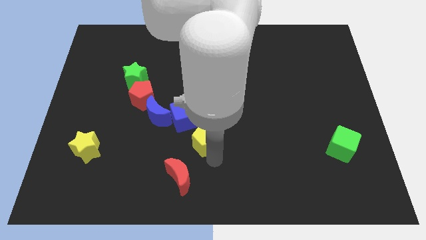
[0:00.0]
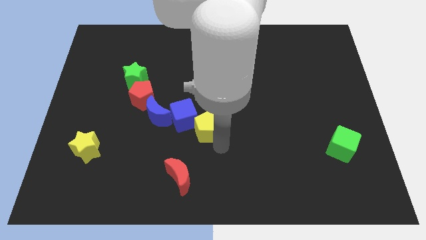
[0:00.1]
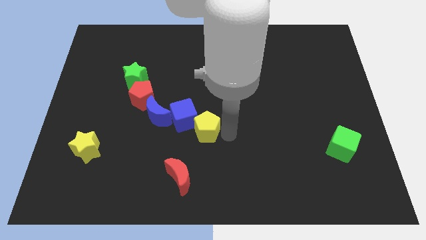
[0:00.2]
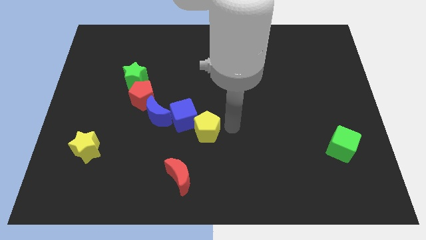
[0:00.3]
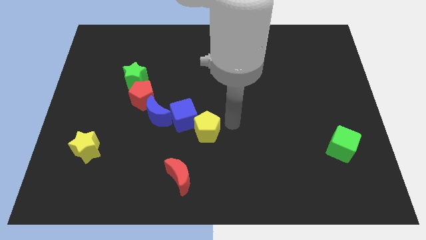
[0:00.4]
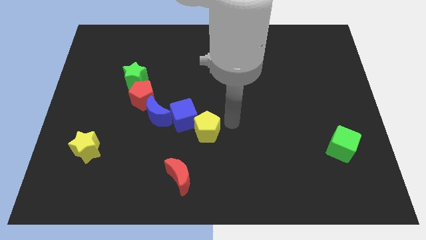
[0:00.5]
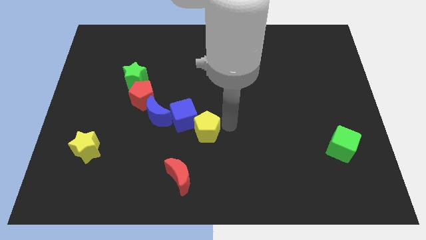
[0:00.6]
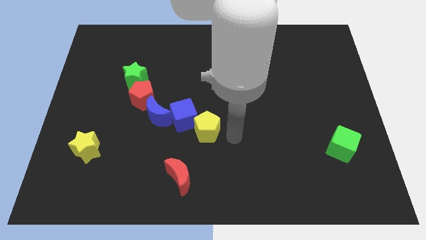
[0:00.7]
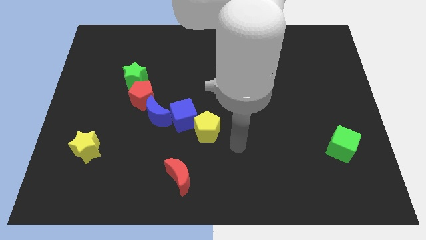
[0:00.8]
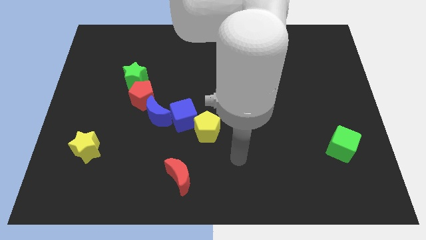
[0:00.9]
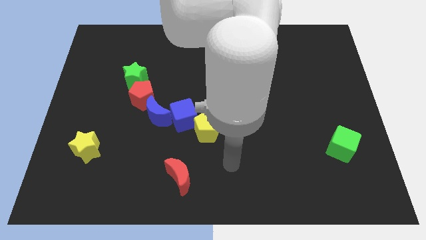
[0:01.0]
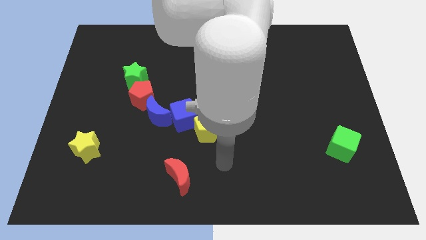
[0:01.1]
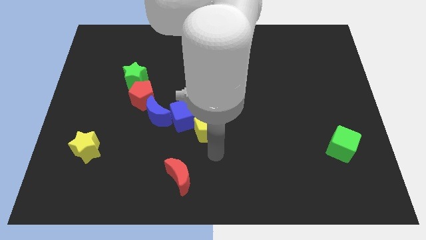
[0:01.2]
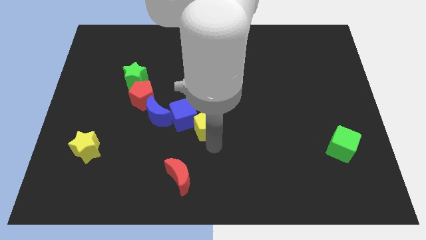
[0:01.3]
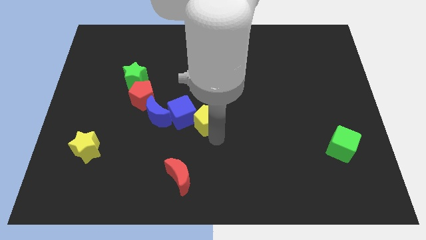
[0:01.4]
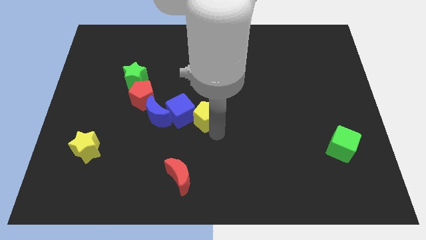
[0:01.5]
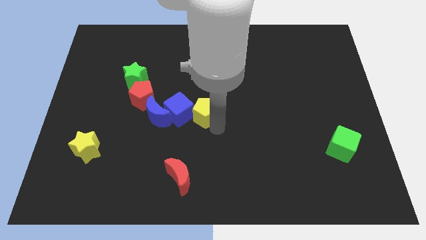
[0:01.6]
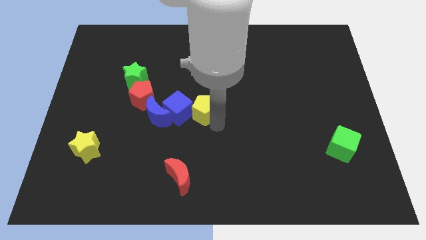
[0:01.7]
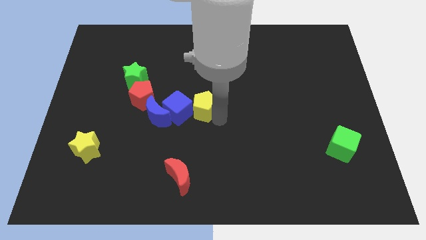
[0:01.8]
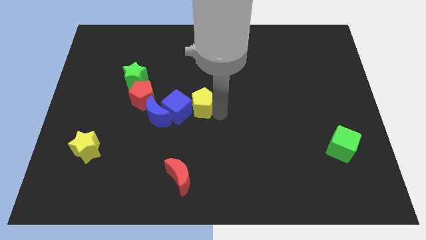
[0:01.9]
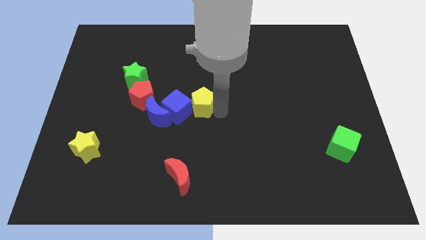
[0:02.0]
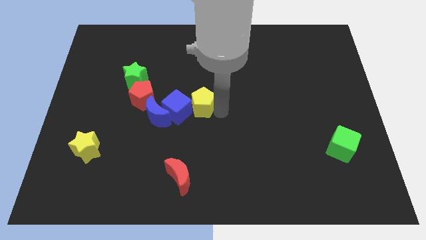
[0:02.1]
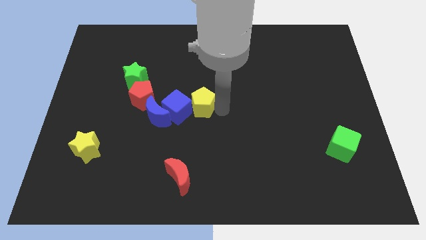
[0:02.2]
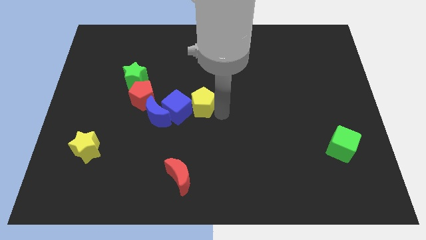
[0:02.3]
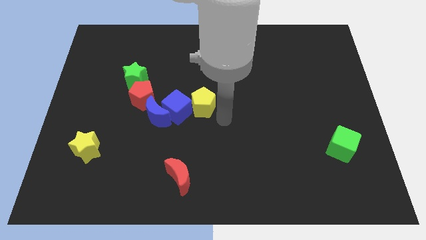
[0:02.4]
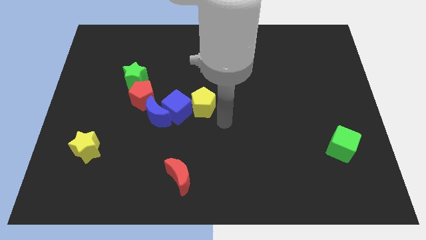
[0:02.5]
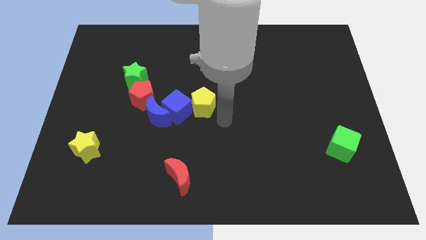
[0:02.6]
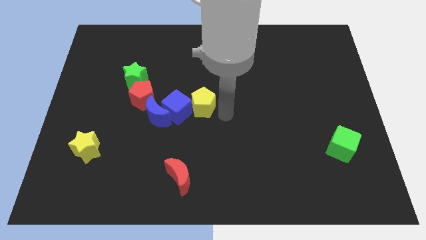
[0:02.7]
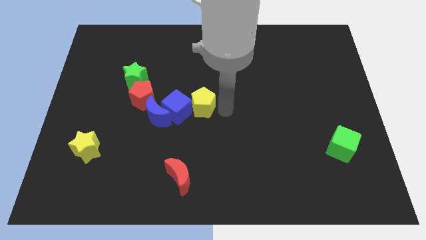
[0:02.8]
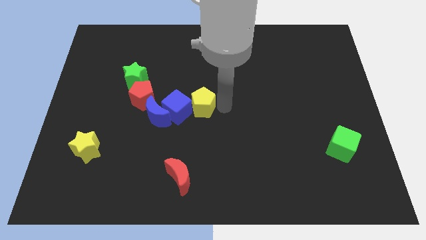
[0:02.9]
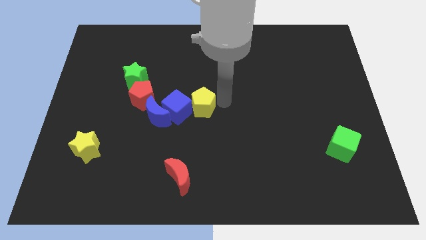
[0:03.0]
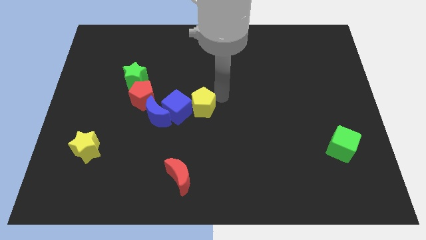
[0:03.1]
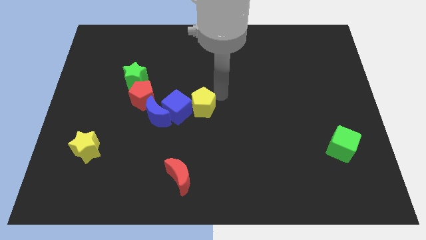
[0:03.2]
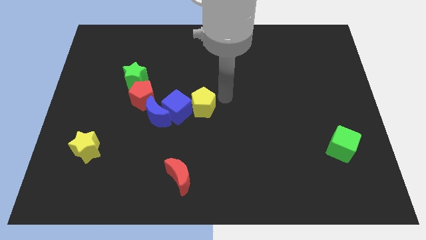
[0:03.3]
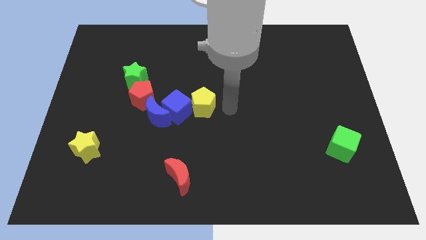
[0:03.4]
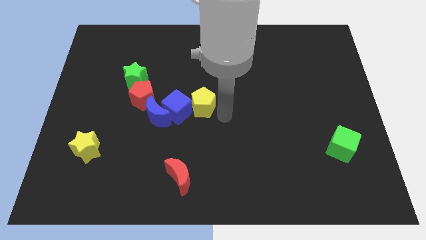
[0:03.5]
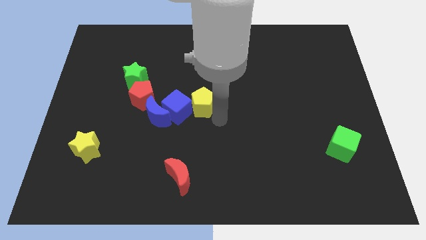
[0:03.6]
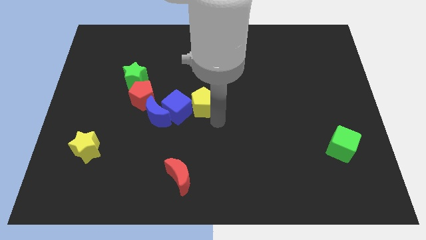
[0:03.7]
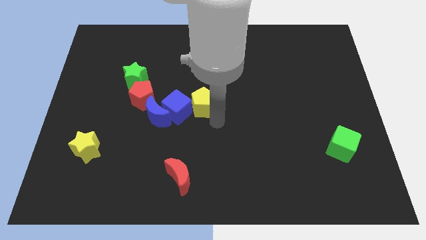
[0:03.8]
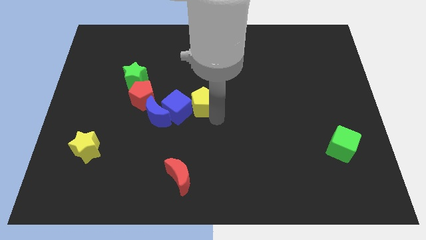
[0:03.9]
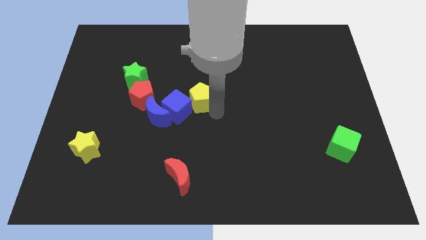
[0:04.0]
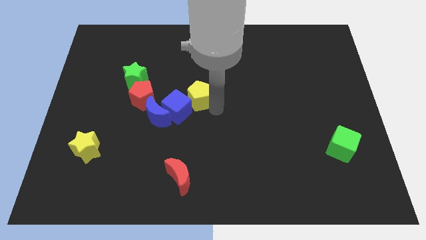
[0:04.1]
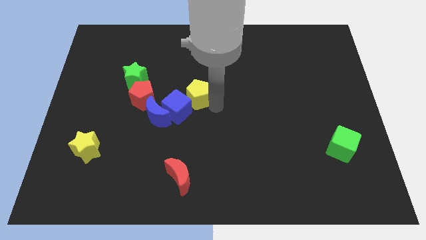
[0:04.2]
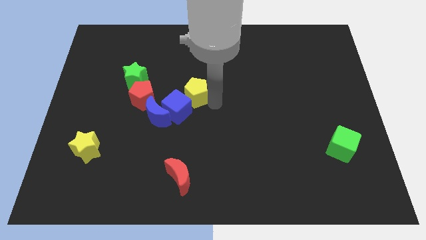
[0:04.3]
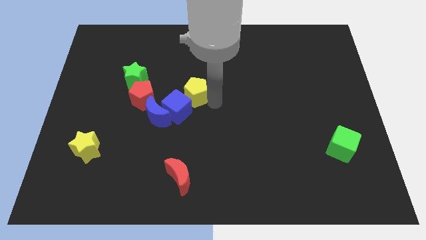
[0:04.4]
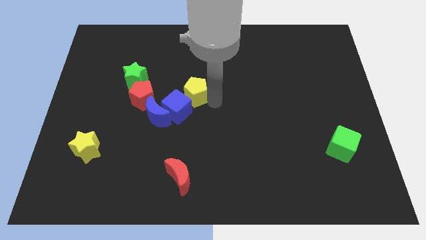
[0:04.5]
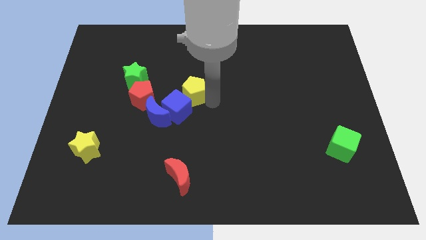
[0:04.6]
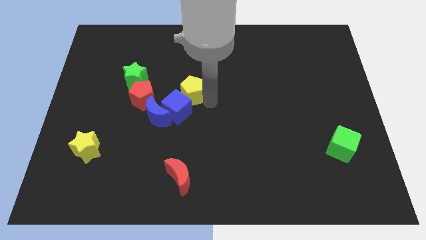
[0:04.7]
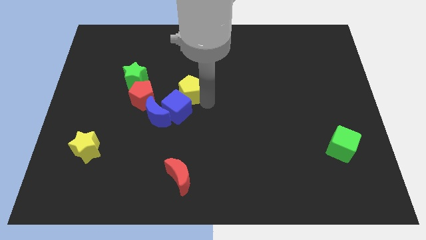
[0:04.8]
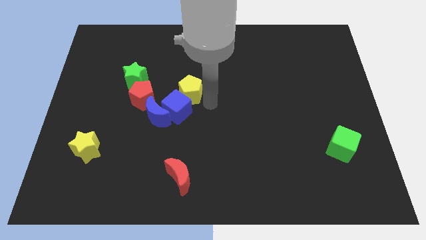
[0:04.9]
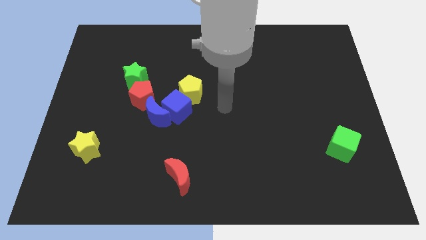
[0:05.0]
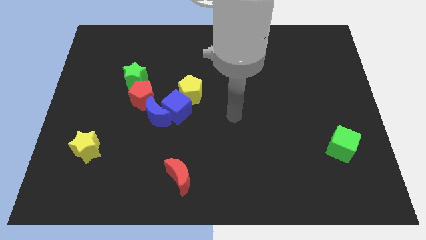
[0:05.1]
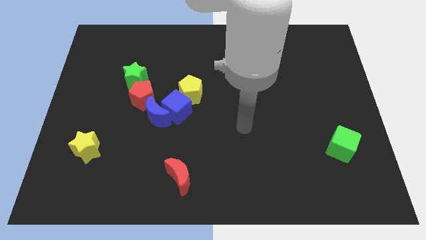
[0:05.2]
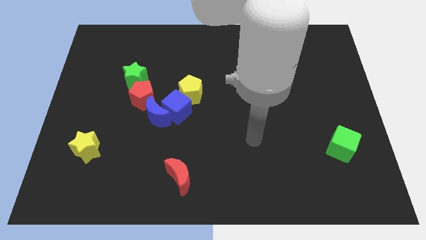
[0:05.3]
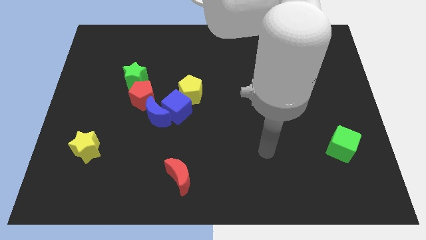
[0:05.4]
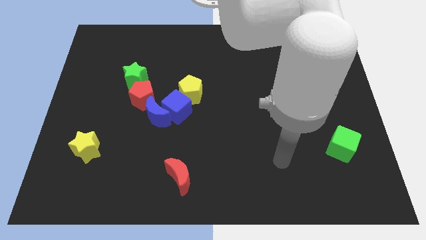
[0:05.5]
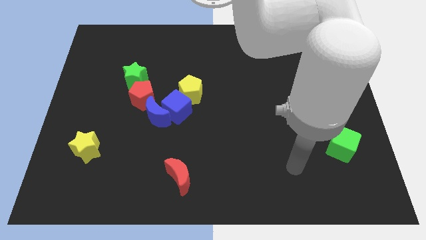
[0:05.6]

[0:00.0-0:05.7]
place the yellow pentagon above the blue cube

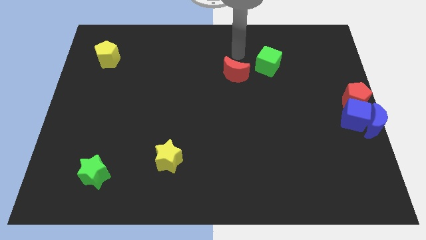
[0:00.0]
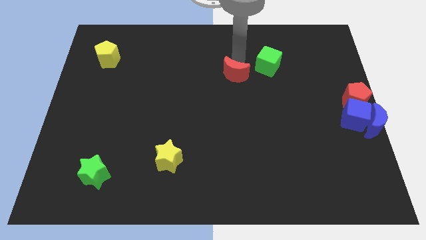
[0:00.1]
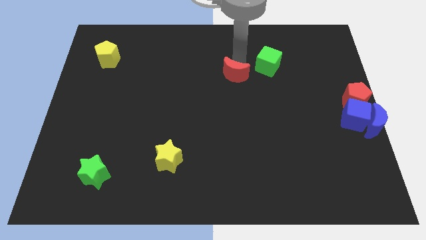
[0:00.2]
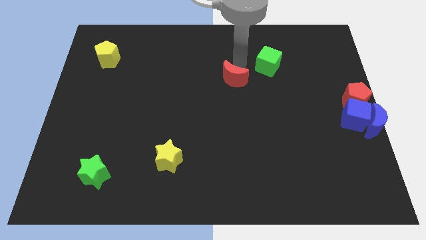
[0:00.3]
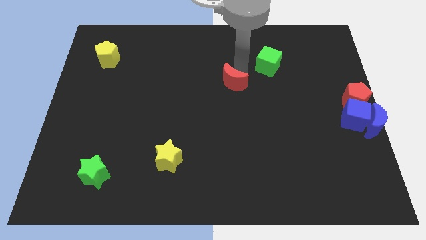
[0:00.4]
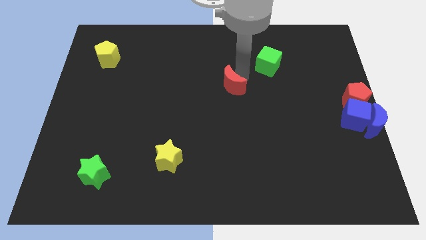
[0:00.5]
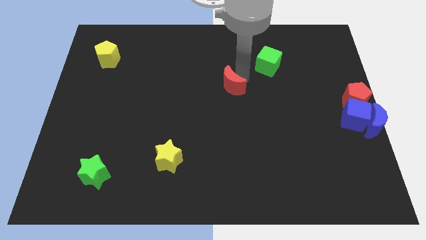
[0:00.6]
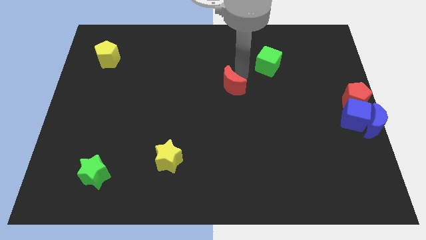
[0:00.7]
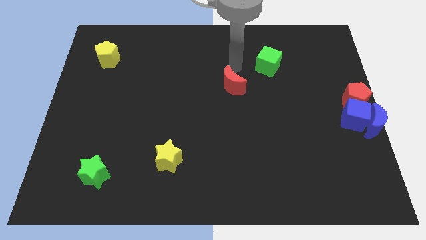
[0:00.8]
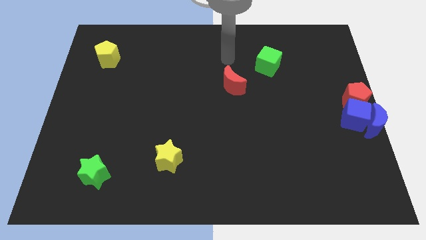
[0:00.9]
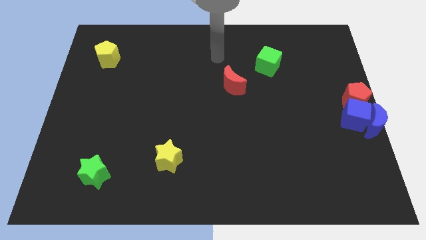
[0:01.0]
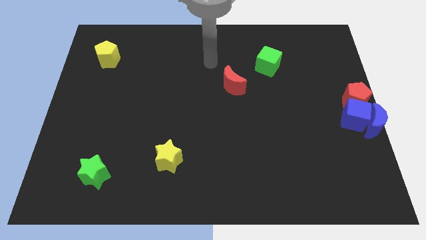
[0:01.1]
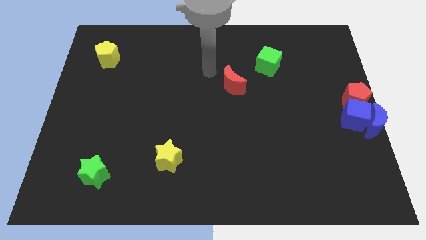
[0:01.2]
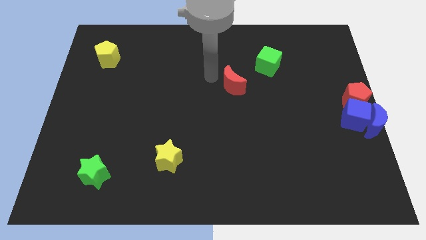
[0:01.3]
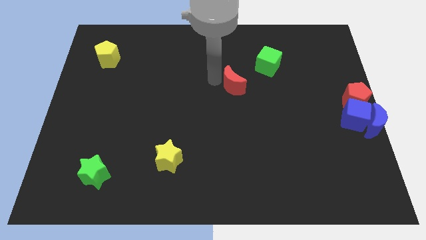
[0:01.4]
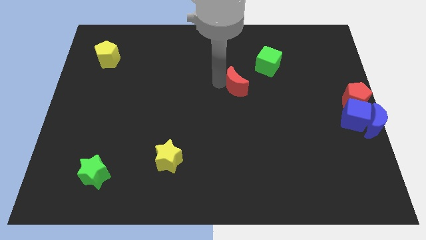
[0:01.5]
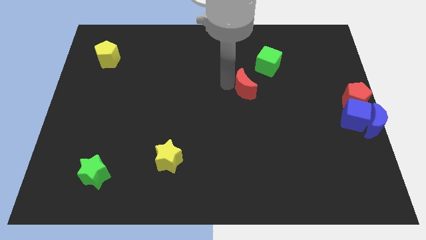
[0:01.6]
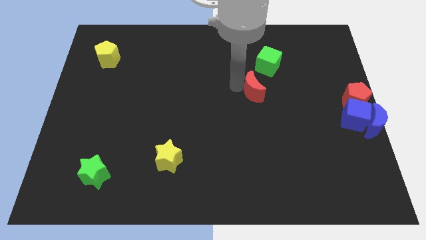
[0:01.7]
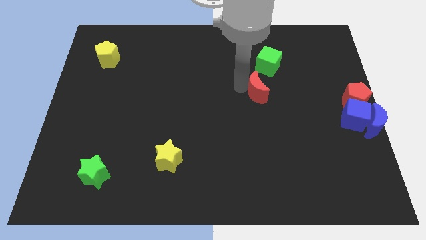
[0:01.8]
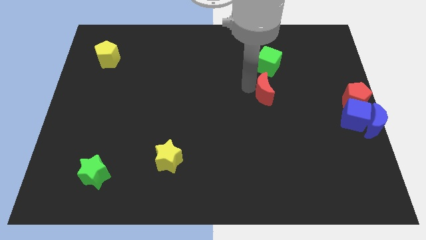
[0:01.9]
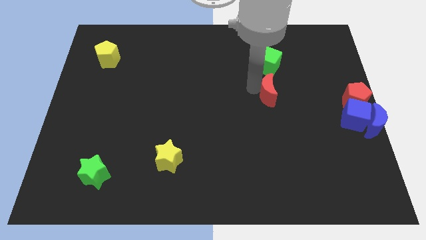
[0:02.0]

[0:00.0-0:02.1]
place the red moon below the green cube

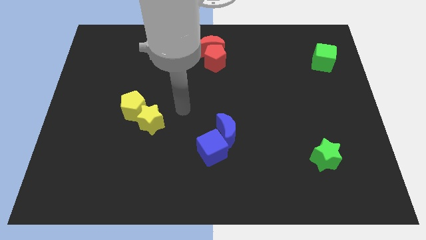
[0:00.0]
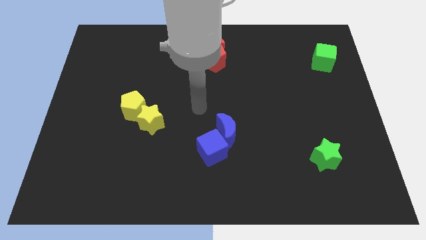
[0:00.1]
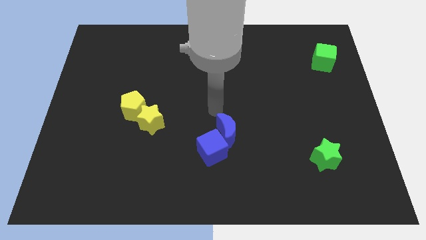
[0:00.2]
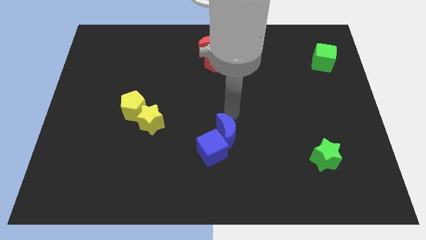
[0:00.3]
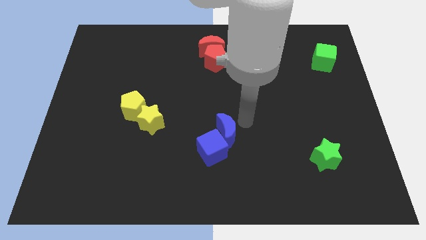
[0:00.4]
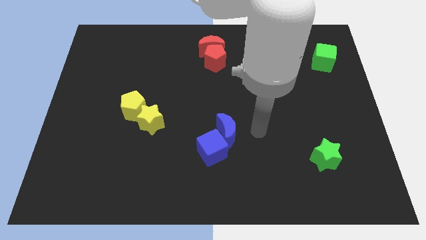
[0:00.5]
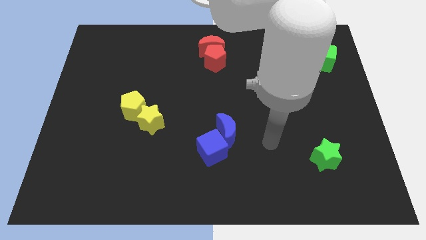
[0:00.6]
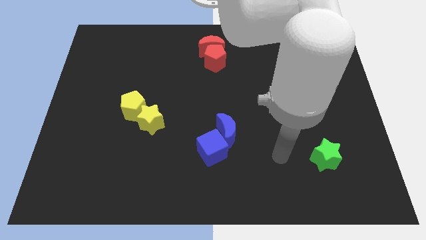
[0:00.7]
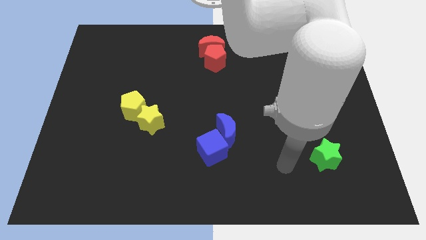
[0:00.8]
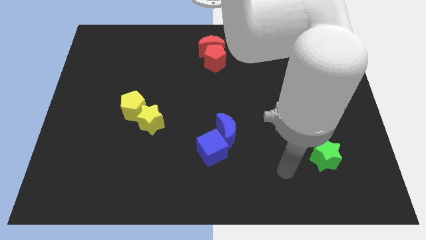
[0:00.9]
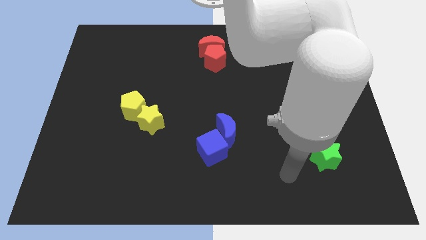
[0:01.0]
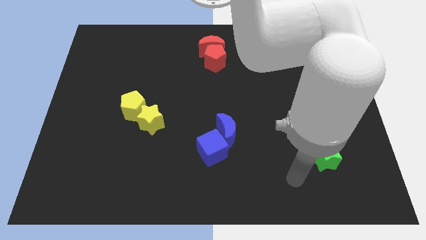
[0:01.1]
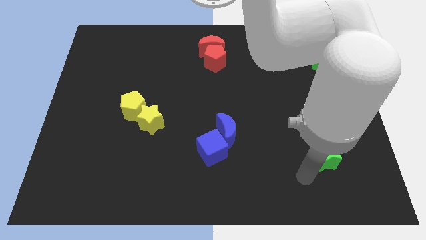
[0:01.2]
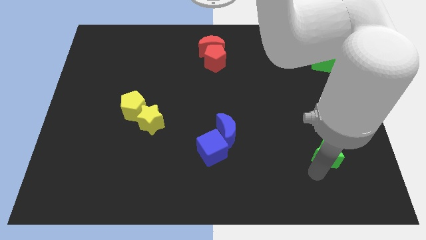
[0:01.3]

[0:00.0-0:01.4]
point your arm at the bottom left side of the green star
